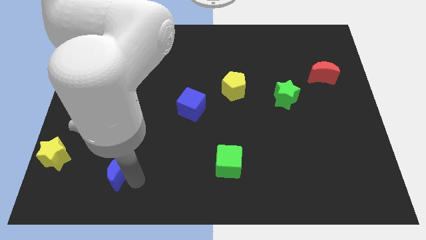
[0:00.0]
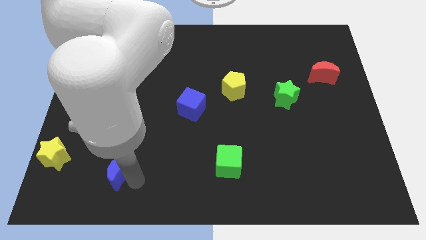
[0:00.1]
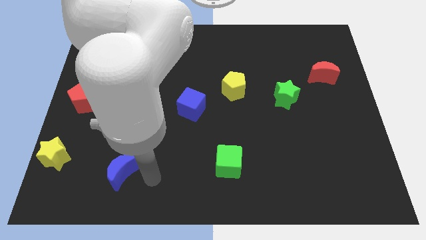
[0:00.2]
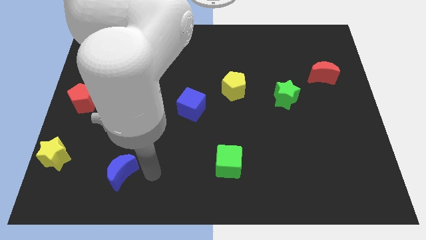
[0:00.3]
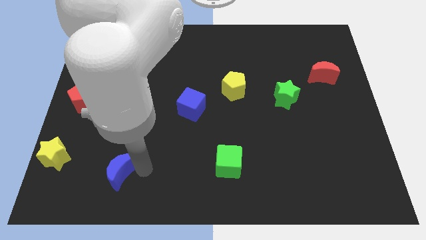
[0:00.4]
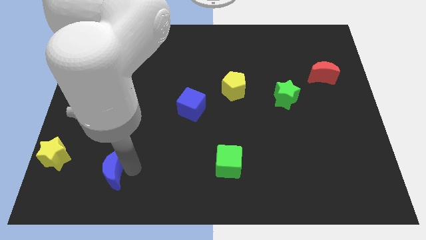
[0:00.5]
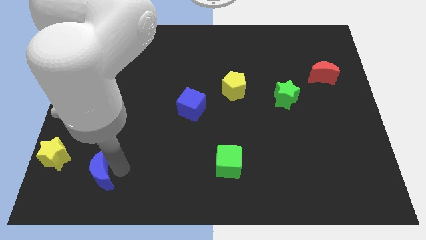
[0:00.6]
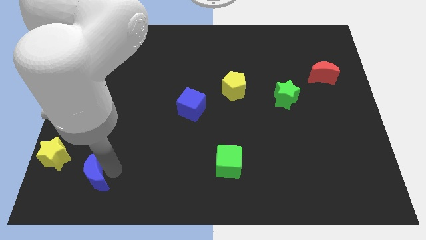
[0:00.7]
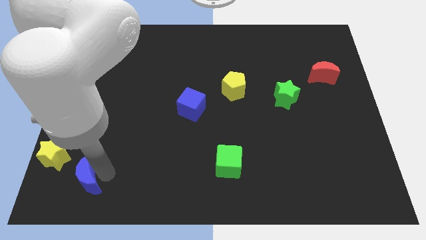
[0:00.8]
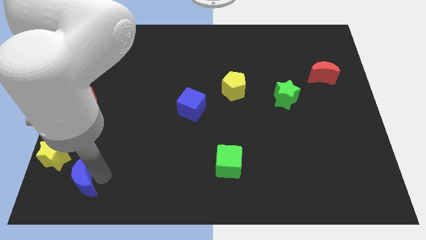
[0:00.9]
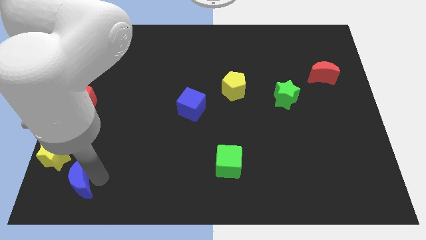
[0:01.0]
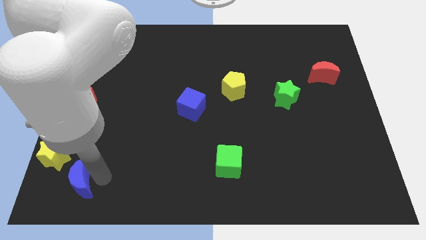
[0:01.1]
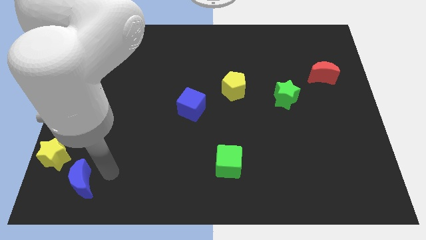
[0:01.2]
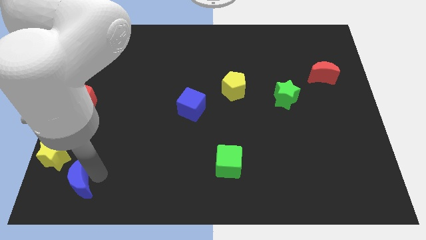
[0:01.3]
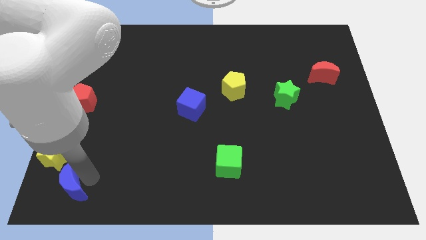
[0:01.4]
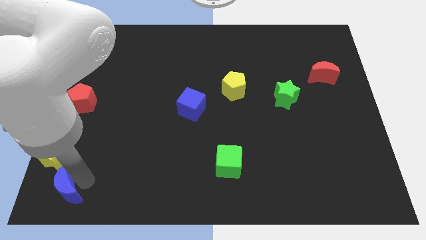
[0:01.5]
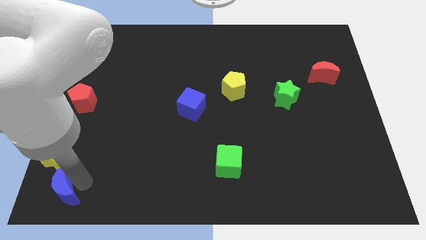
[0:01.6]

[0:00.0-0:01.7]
push the blue cube at the bottom right side of the board

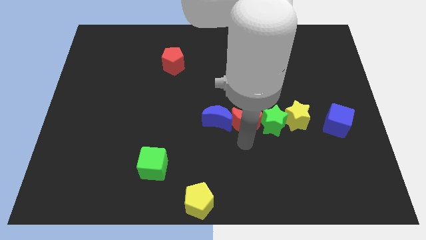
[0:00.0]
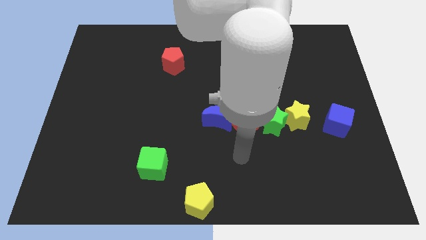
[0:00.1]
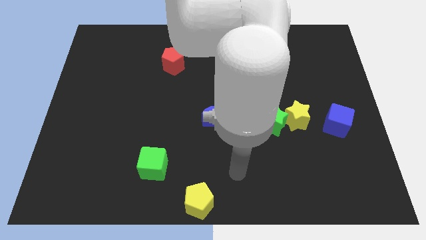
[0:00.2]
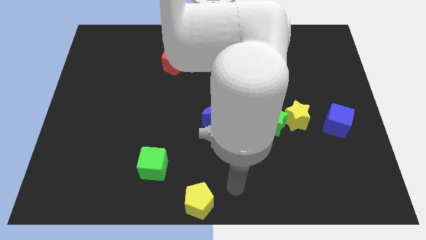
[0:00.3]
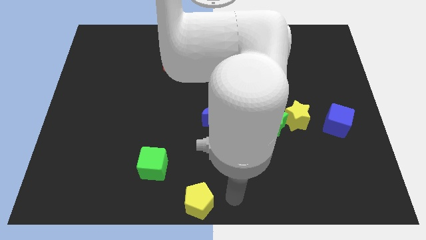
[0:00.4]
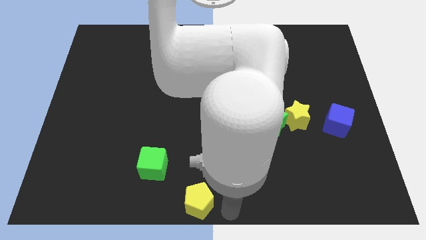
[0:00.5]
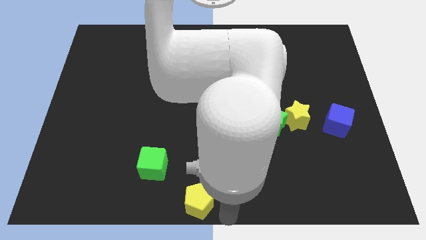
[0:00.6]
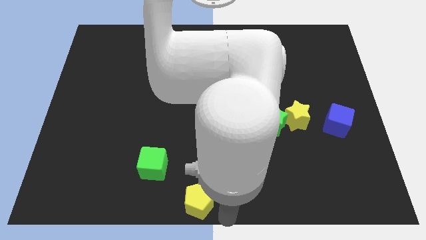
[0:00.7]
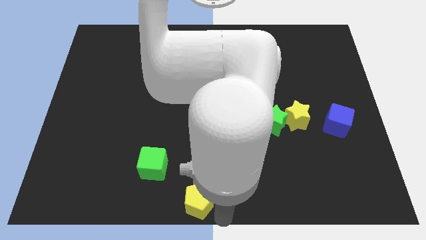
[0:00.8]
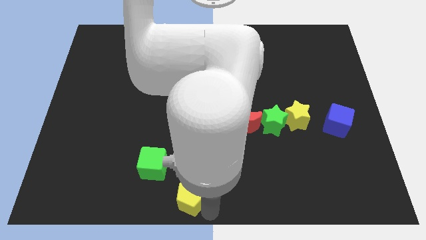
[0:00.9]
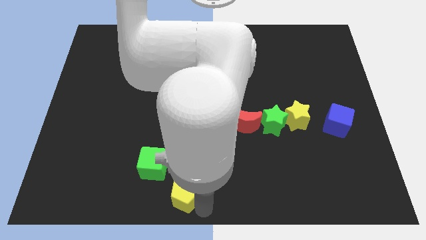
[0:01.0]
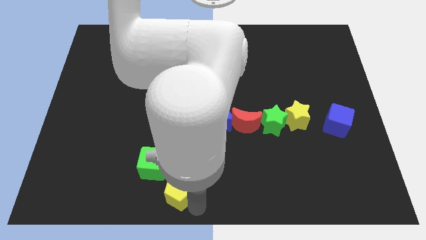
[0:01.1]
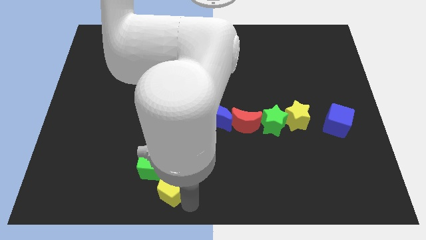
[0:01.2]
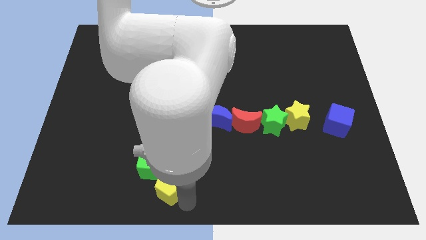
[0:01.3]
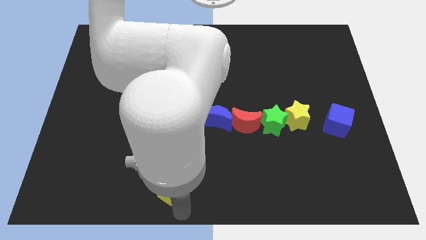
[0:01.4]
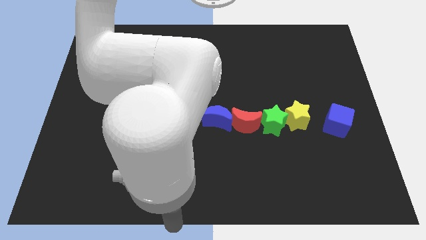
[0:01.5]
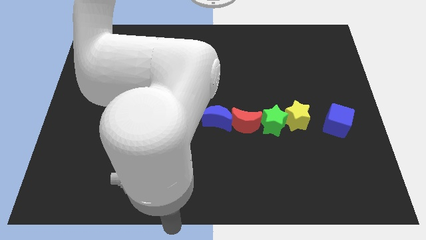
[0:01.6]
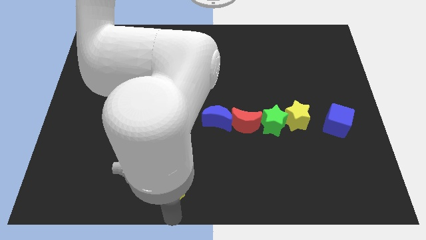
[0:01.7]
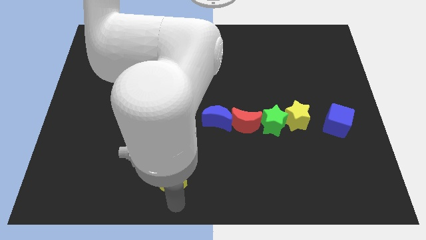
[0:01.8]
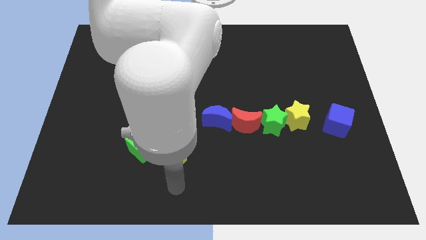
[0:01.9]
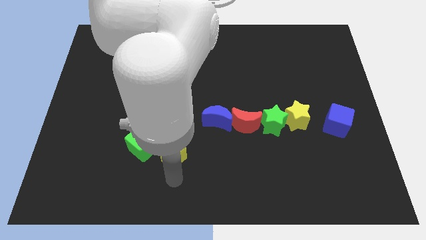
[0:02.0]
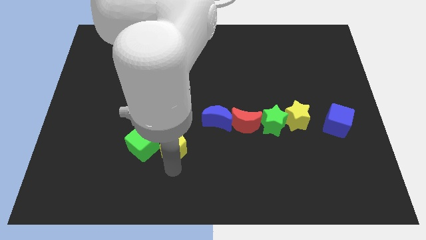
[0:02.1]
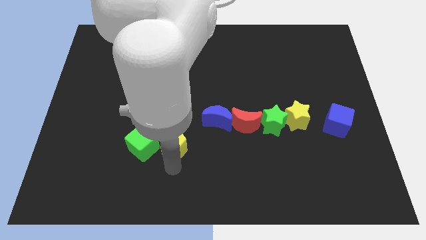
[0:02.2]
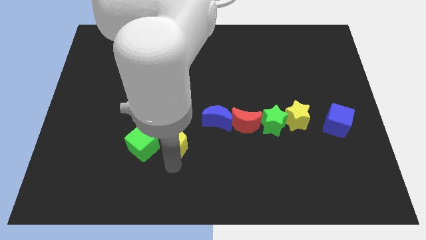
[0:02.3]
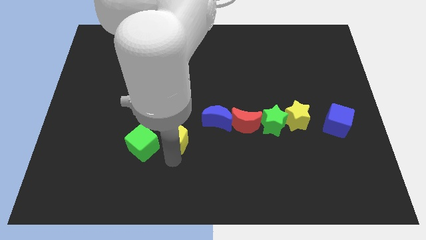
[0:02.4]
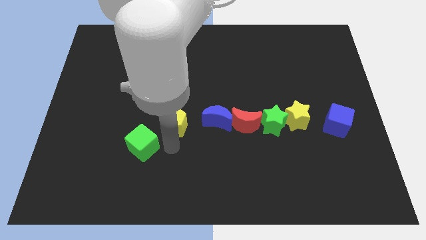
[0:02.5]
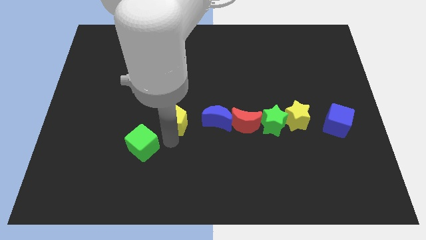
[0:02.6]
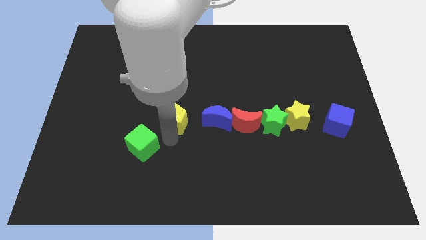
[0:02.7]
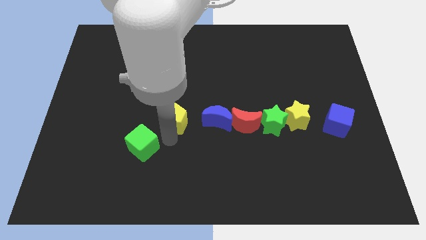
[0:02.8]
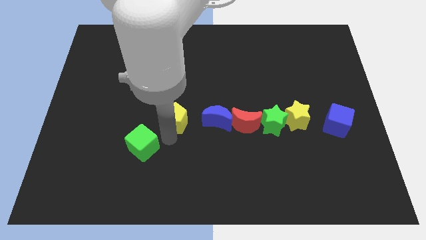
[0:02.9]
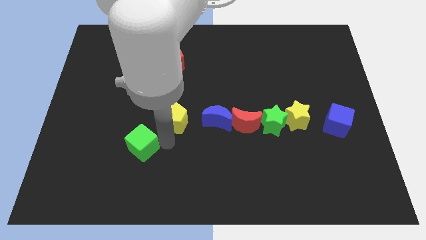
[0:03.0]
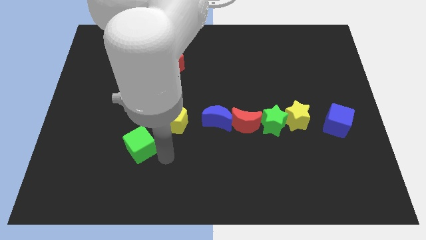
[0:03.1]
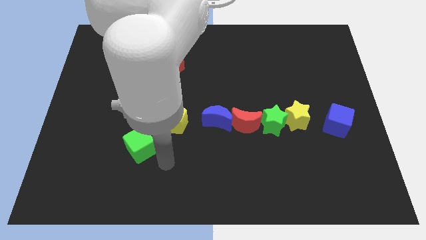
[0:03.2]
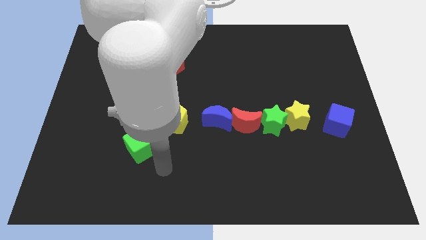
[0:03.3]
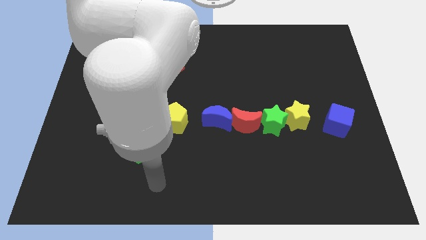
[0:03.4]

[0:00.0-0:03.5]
place the yellow pentagon left to the blue moon

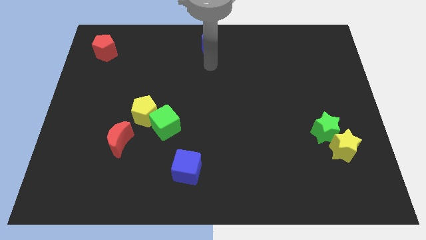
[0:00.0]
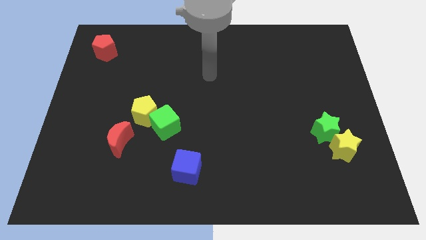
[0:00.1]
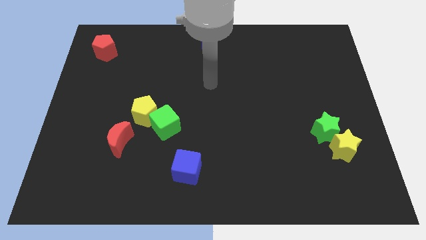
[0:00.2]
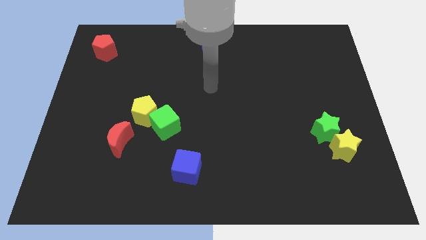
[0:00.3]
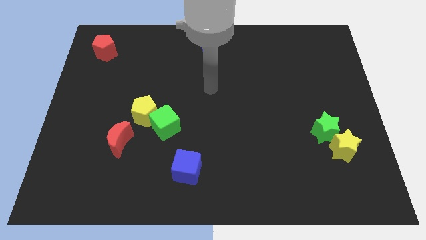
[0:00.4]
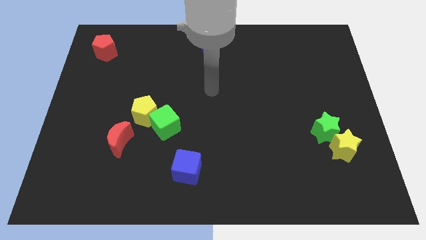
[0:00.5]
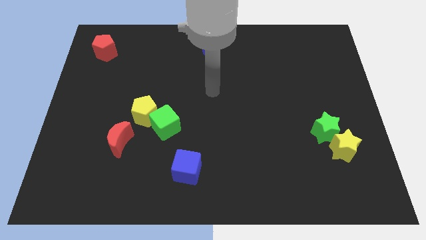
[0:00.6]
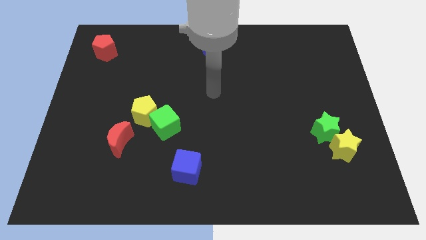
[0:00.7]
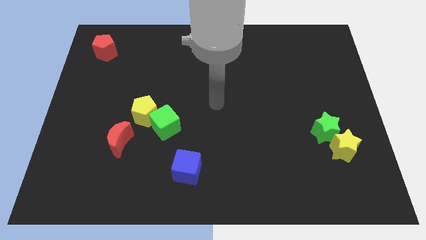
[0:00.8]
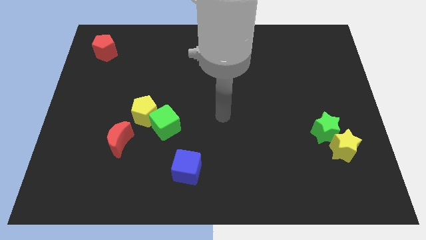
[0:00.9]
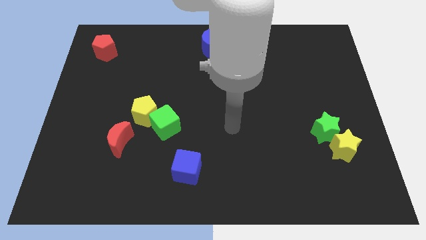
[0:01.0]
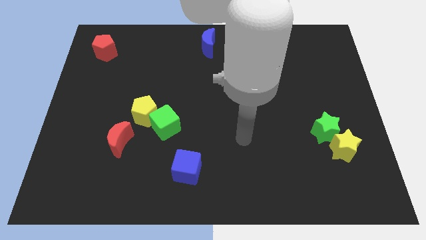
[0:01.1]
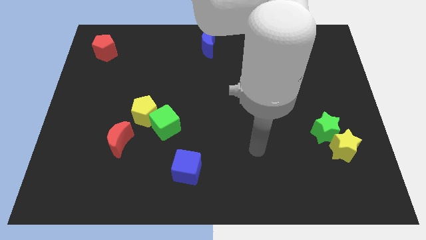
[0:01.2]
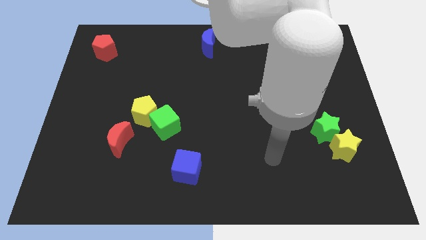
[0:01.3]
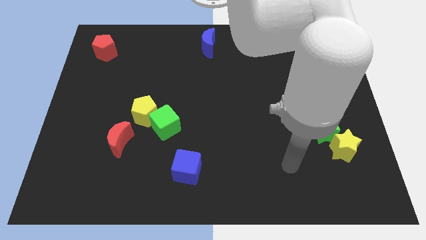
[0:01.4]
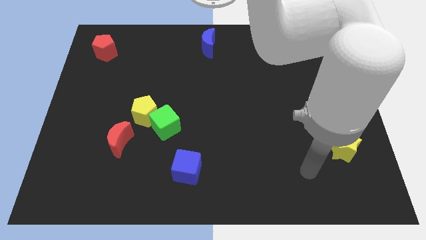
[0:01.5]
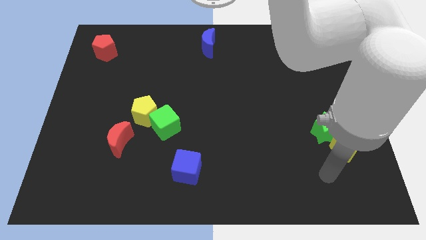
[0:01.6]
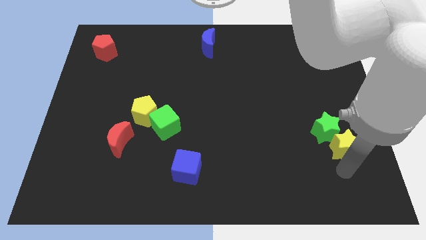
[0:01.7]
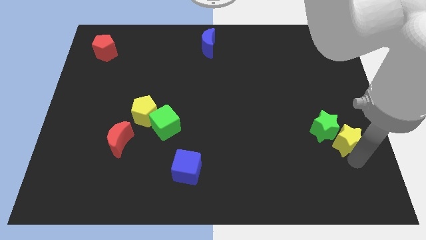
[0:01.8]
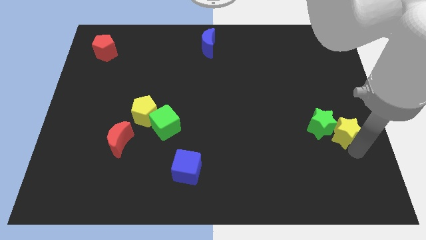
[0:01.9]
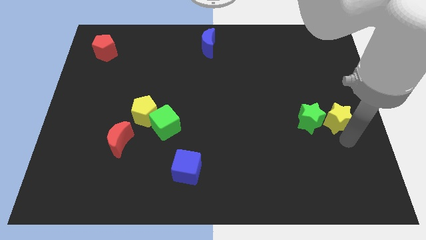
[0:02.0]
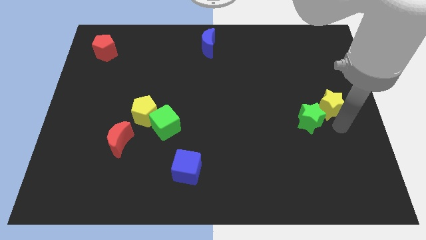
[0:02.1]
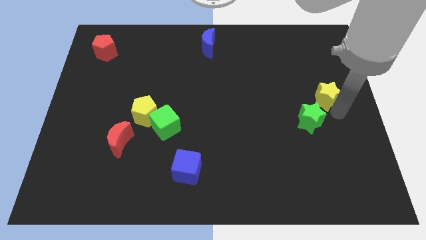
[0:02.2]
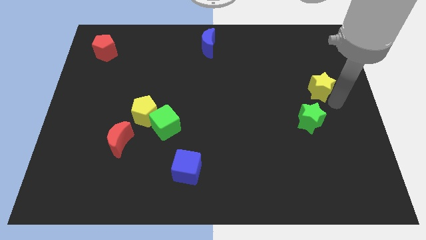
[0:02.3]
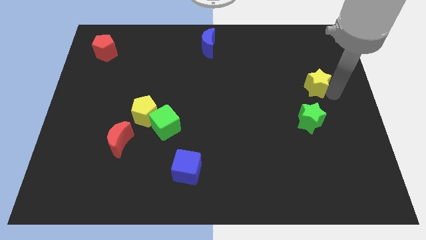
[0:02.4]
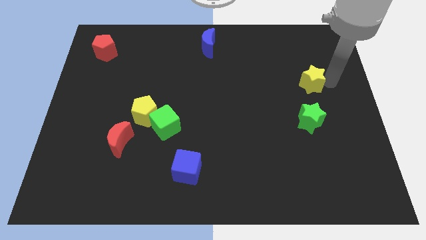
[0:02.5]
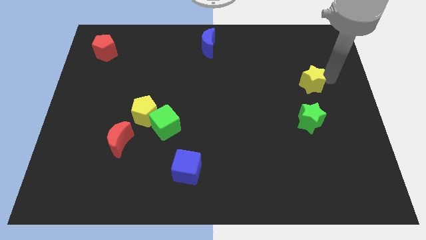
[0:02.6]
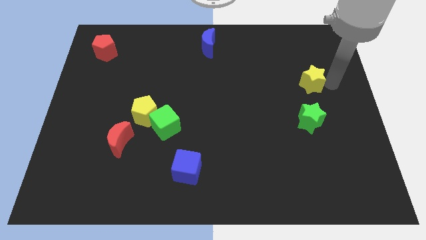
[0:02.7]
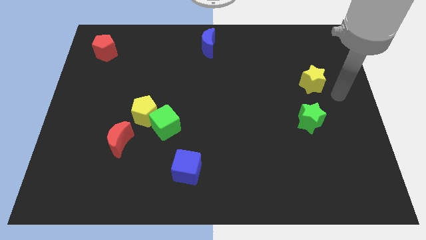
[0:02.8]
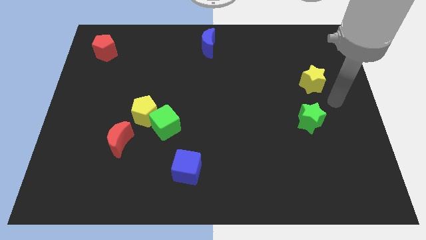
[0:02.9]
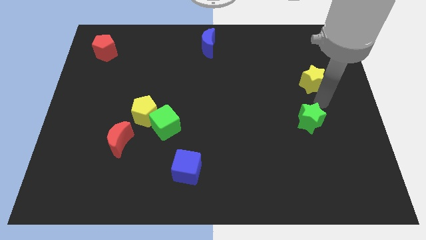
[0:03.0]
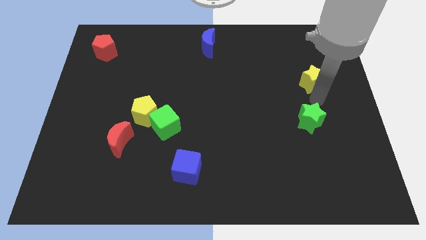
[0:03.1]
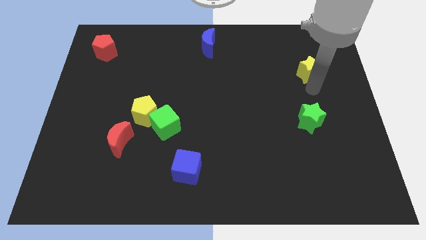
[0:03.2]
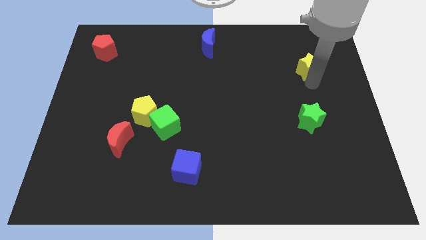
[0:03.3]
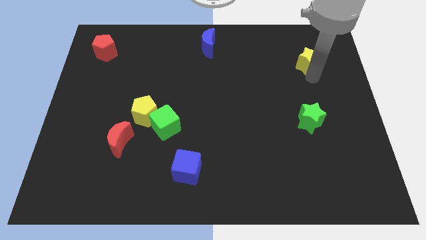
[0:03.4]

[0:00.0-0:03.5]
move your arm away from the blue moon

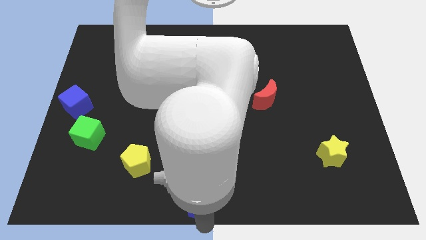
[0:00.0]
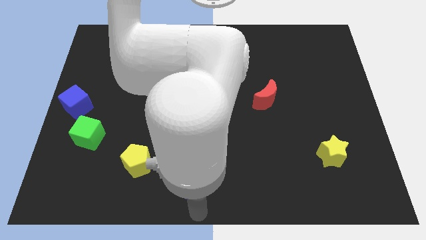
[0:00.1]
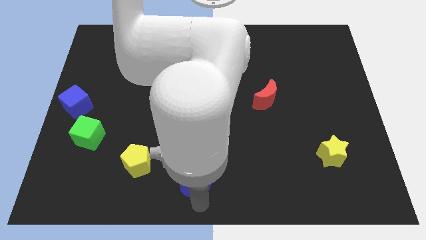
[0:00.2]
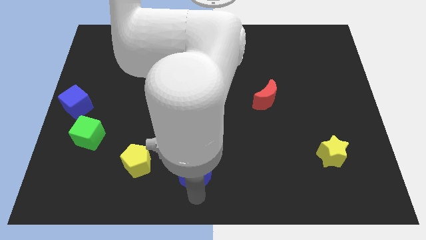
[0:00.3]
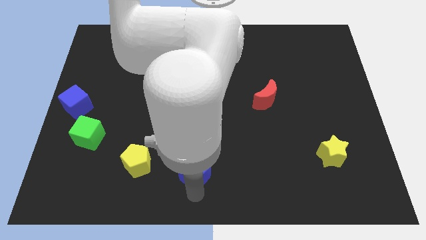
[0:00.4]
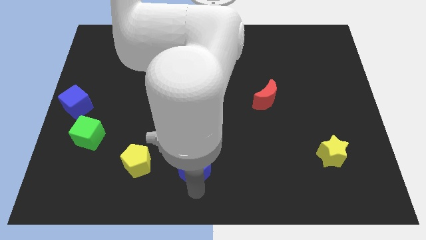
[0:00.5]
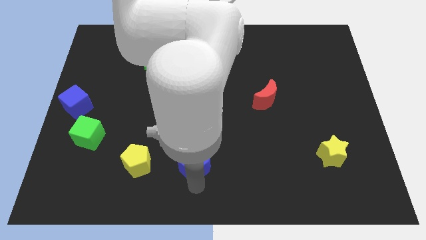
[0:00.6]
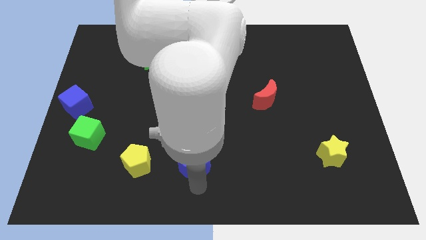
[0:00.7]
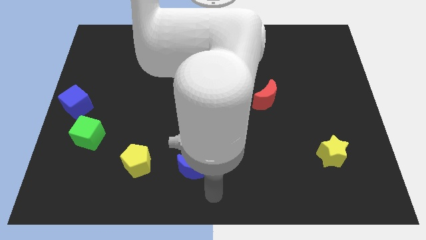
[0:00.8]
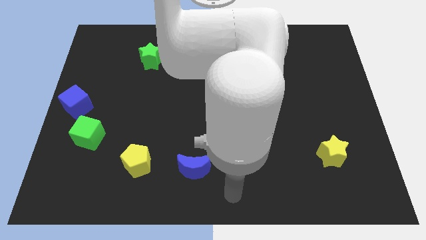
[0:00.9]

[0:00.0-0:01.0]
move the blue crescent to the right of the yellow pentagon
